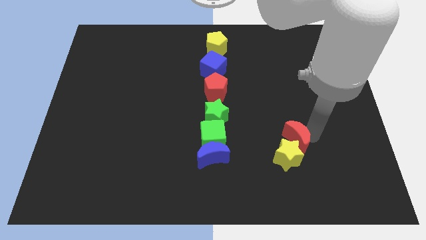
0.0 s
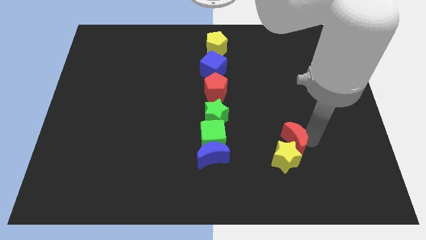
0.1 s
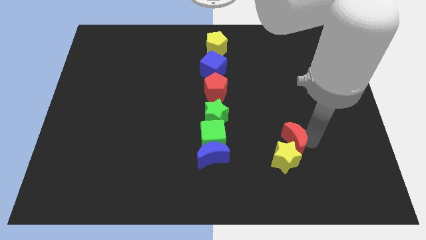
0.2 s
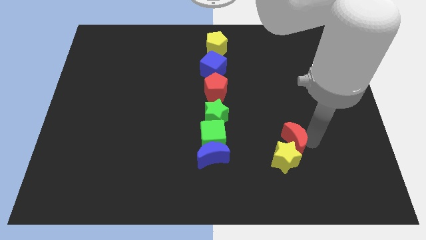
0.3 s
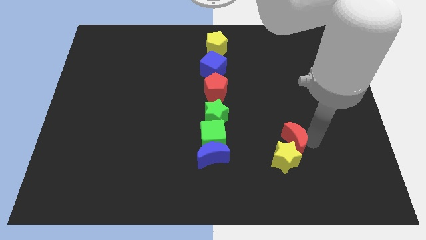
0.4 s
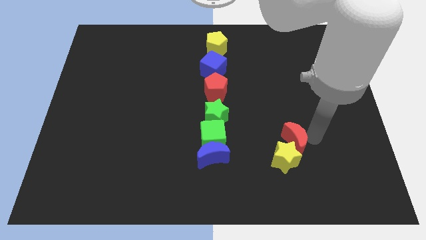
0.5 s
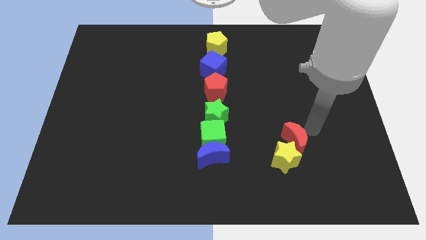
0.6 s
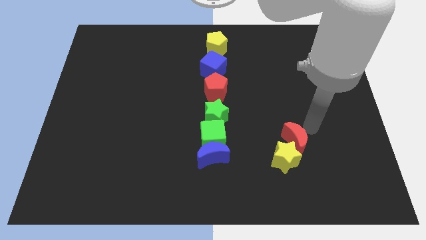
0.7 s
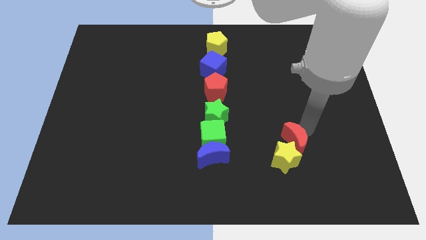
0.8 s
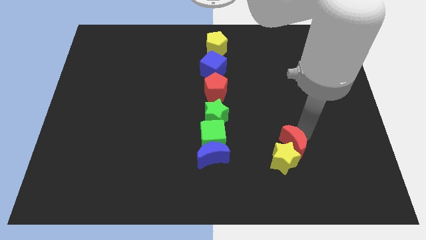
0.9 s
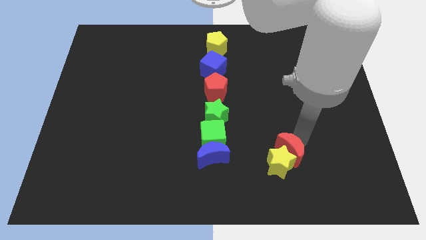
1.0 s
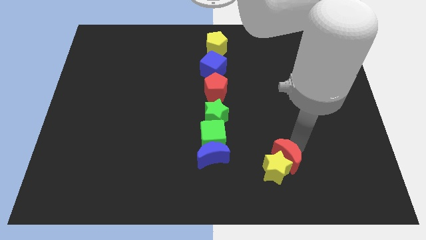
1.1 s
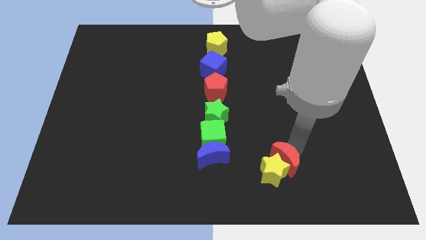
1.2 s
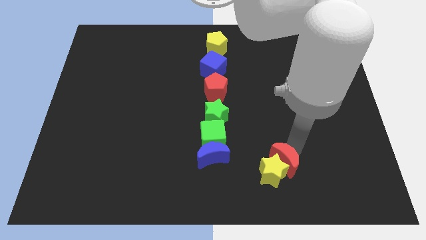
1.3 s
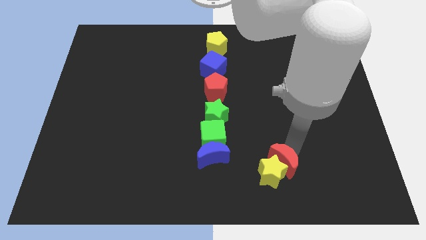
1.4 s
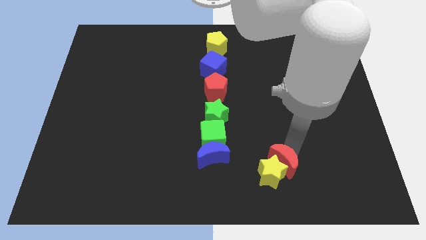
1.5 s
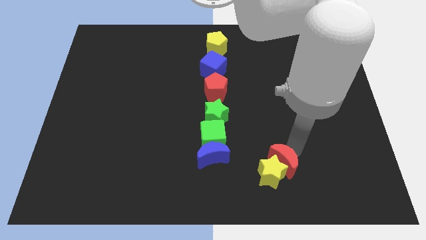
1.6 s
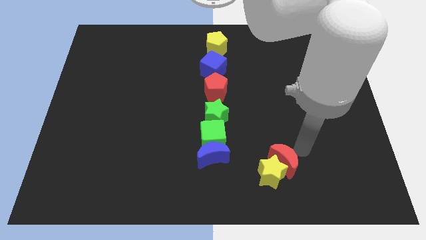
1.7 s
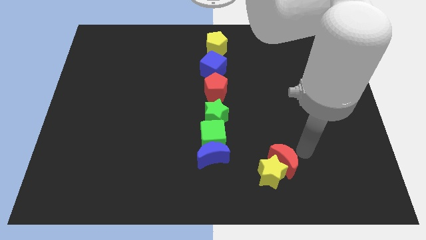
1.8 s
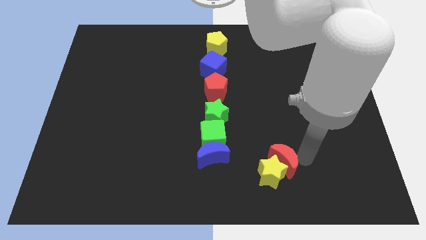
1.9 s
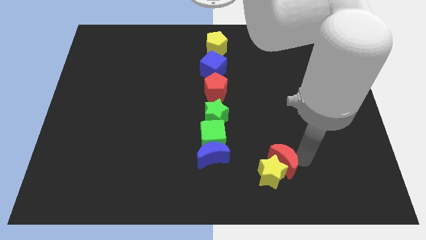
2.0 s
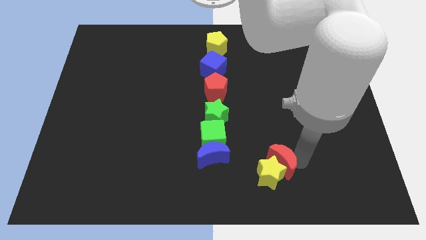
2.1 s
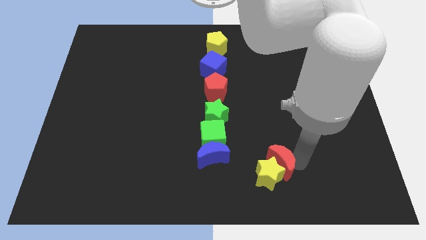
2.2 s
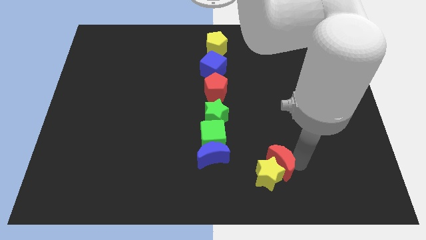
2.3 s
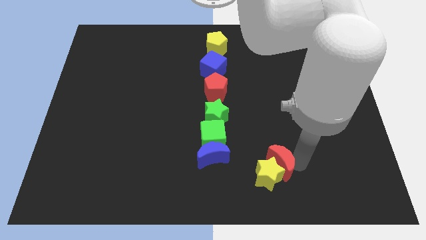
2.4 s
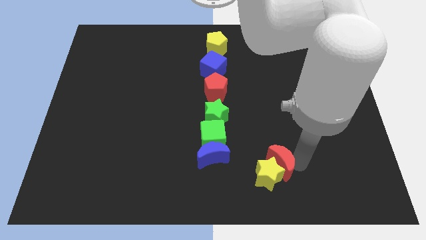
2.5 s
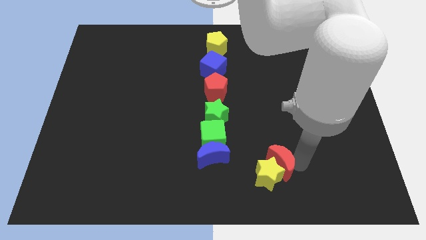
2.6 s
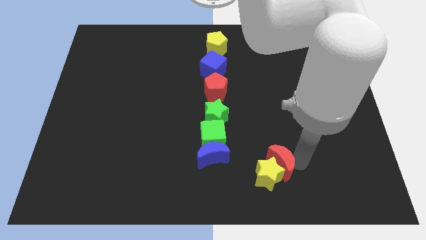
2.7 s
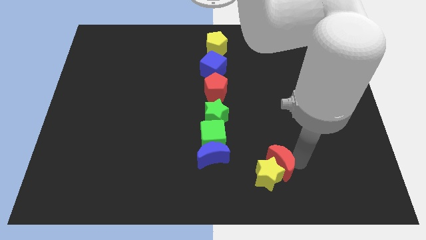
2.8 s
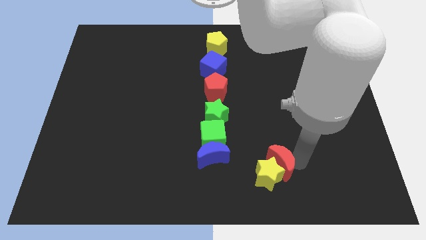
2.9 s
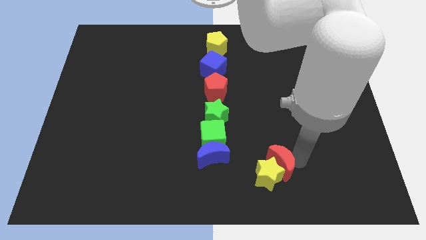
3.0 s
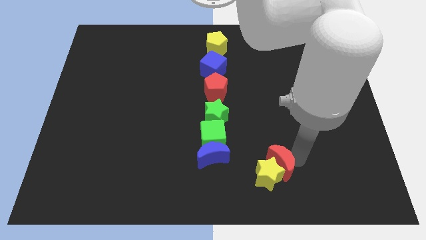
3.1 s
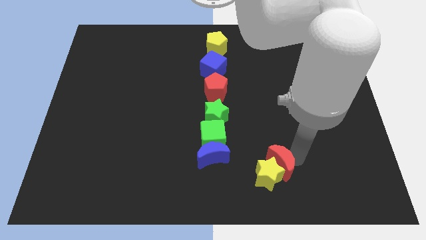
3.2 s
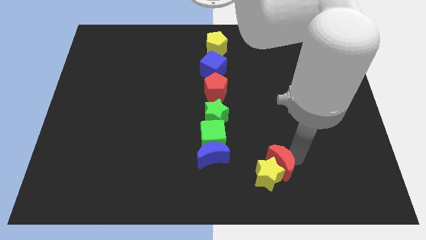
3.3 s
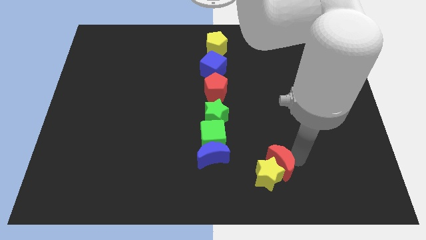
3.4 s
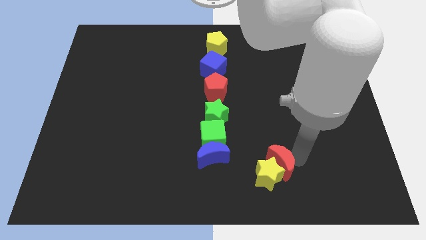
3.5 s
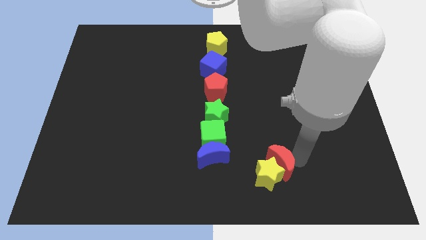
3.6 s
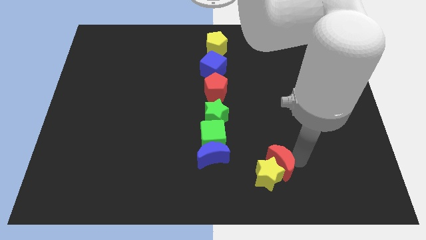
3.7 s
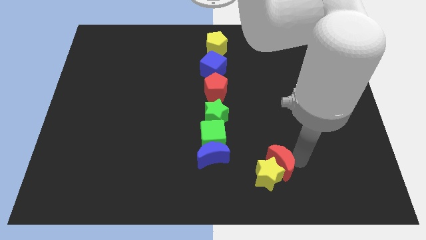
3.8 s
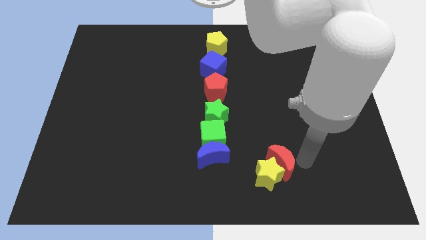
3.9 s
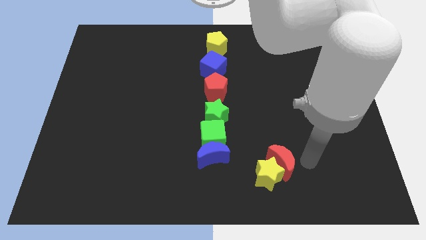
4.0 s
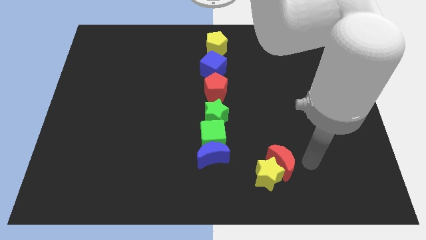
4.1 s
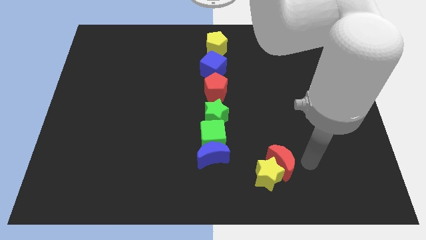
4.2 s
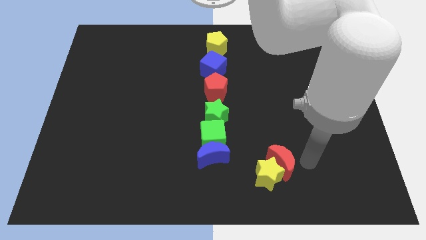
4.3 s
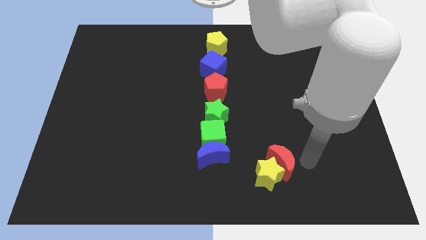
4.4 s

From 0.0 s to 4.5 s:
move the red crescent along with the yellow star to the bottom right of the blue crescent

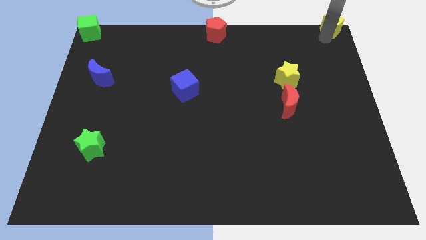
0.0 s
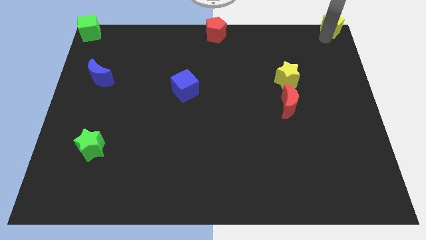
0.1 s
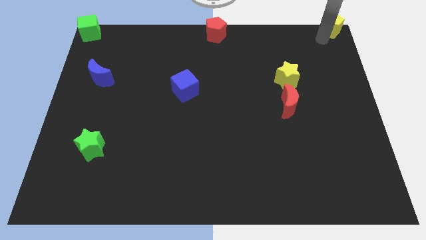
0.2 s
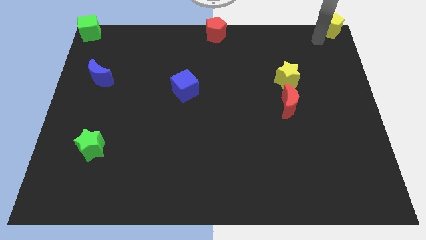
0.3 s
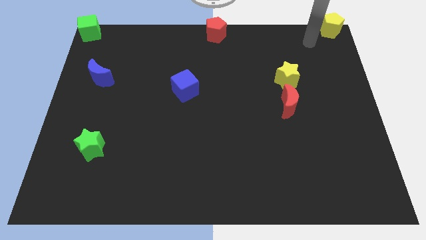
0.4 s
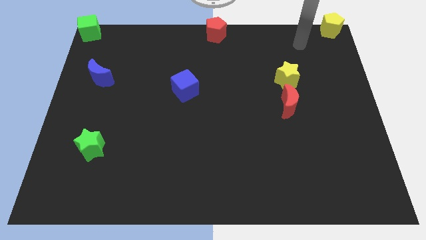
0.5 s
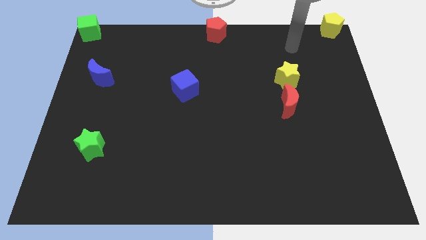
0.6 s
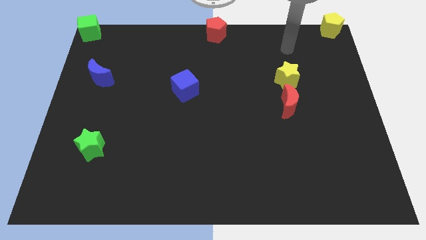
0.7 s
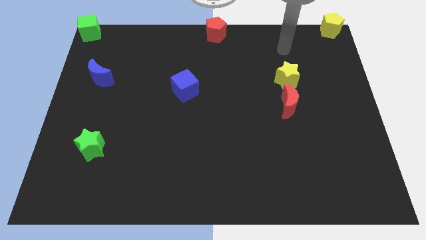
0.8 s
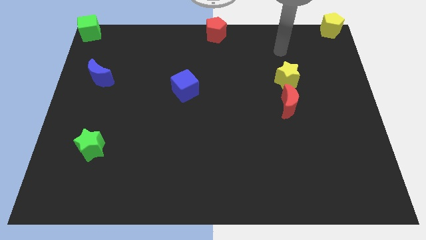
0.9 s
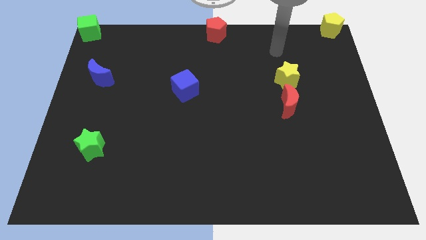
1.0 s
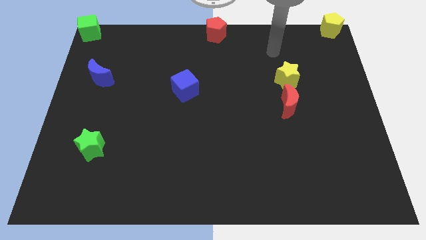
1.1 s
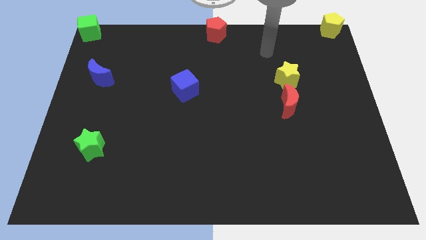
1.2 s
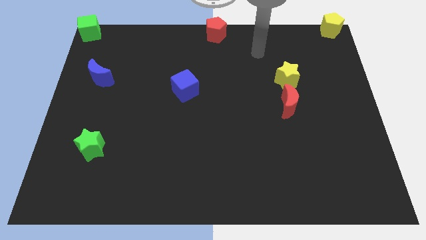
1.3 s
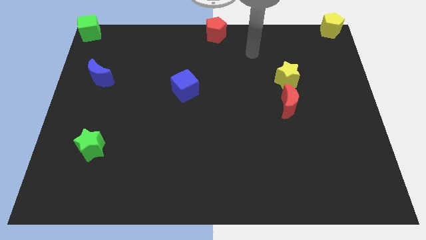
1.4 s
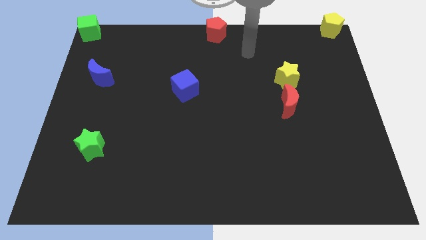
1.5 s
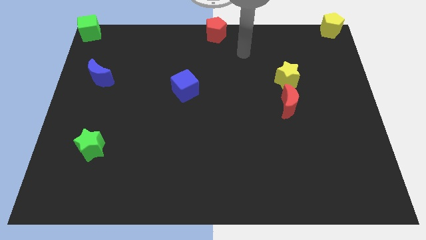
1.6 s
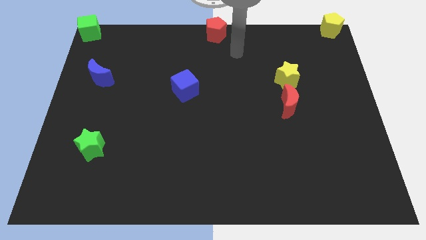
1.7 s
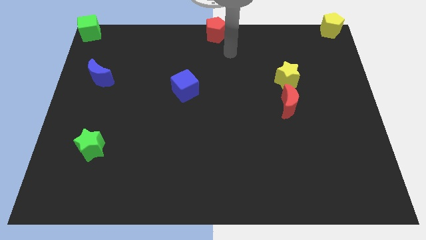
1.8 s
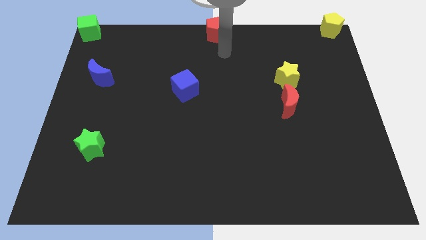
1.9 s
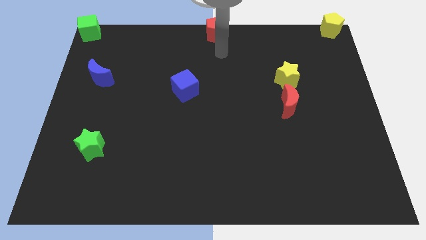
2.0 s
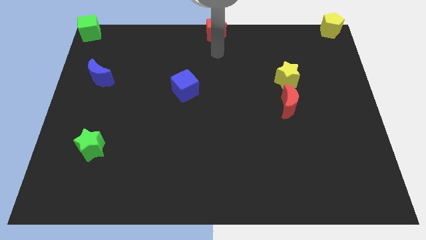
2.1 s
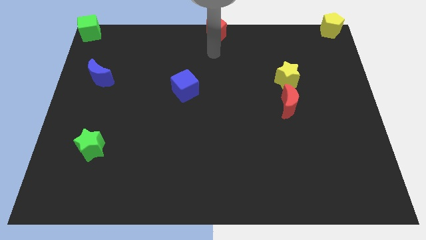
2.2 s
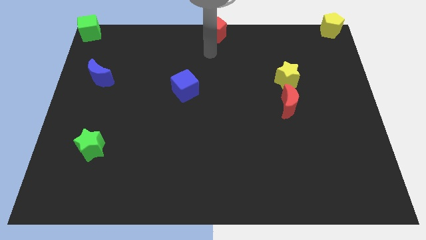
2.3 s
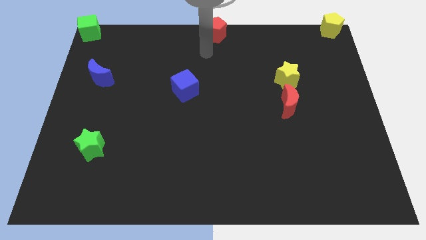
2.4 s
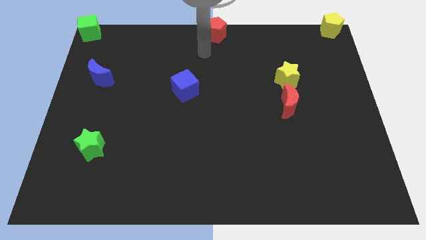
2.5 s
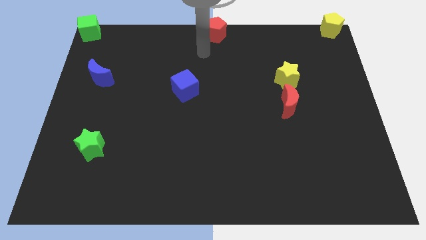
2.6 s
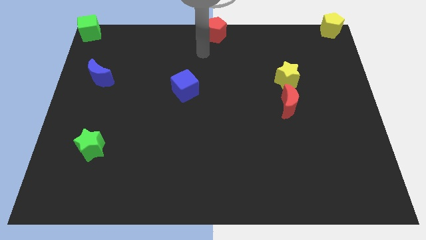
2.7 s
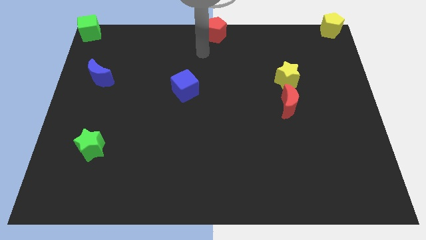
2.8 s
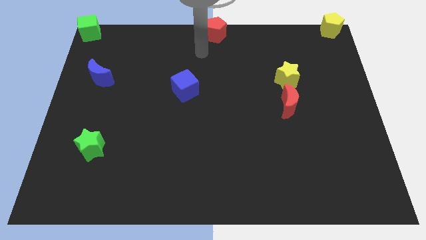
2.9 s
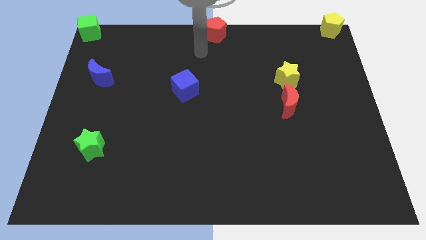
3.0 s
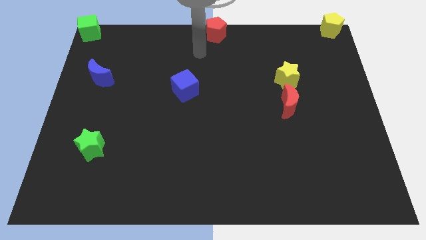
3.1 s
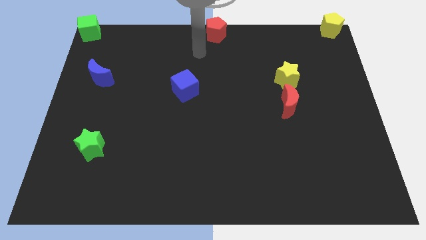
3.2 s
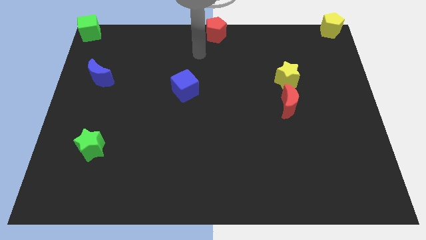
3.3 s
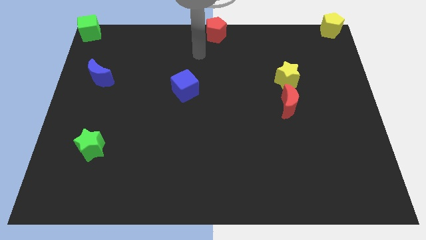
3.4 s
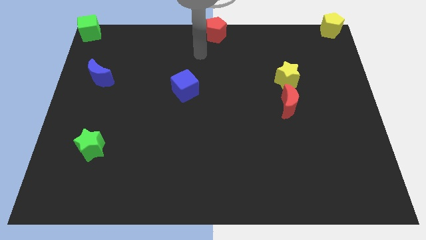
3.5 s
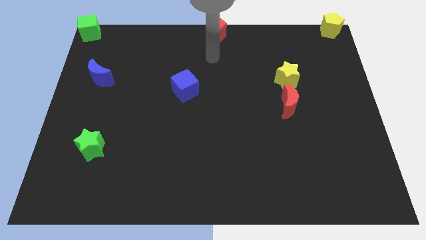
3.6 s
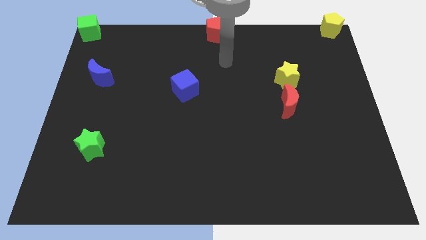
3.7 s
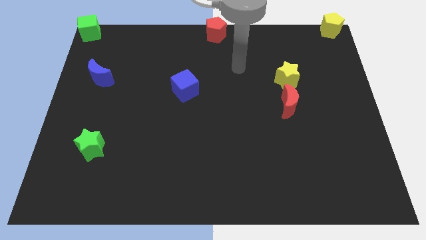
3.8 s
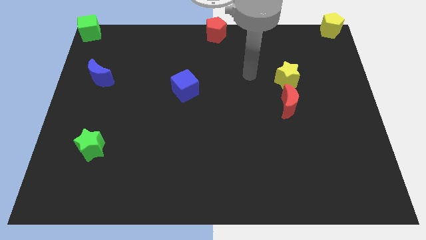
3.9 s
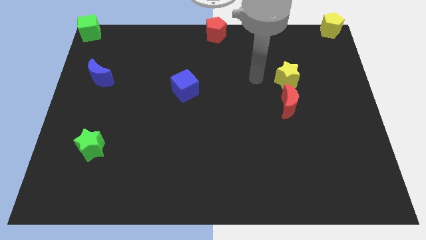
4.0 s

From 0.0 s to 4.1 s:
go away from the yellow pentagon towards the center

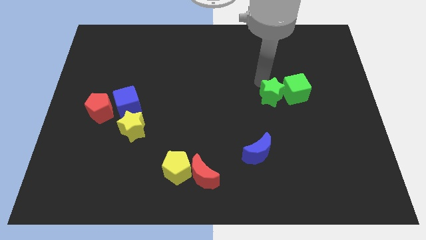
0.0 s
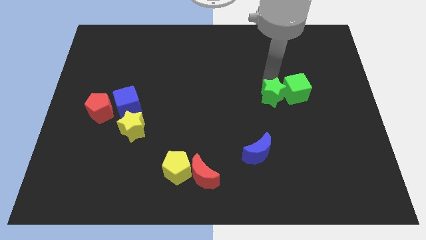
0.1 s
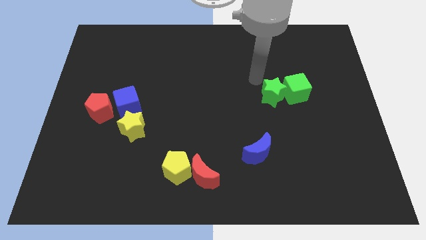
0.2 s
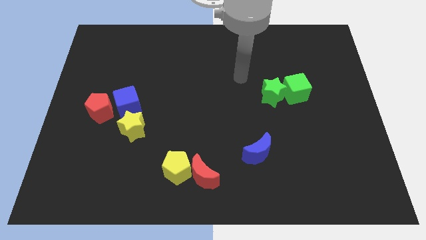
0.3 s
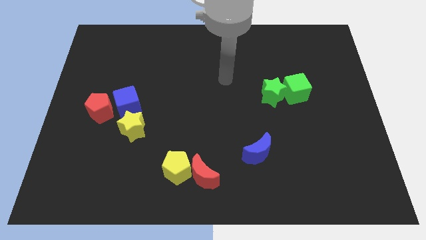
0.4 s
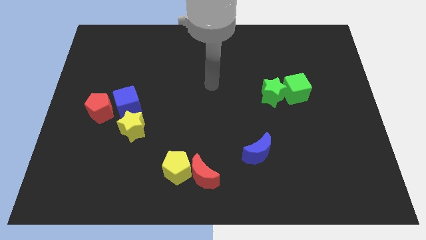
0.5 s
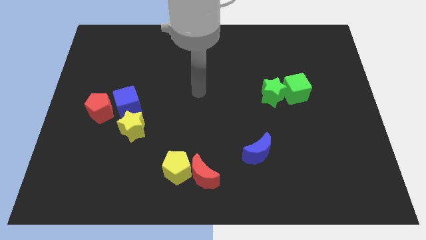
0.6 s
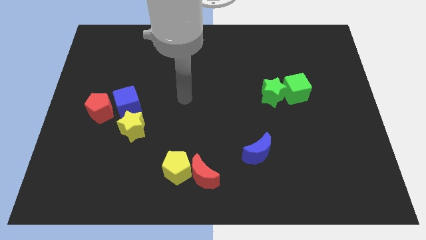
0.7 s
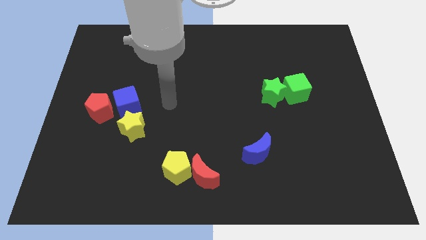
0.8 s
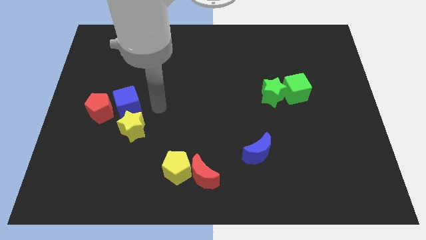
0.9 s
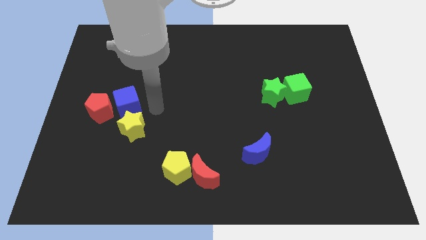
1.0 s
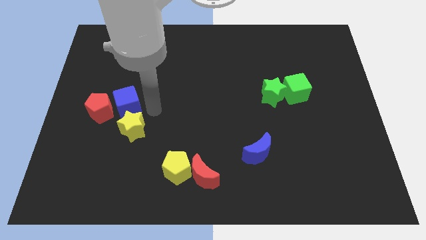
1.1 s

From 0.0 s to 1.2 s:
move your arm away from the green star
